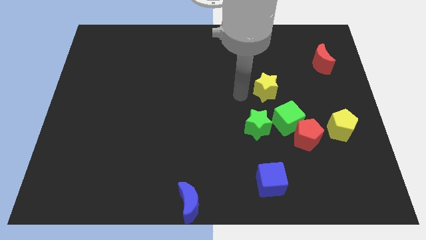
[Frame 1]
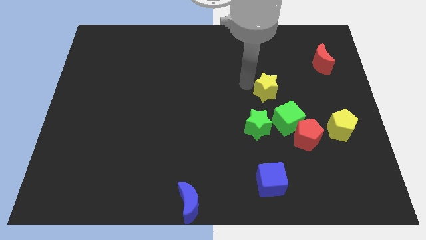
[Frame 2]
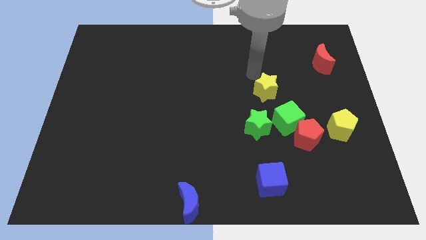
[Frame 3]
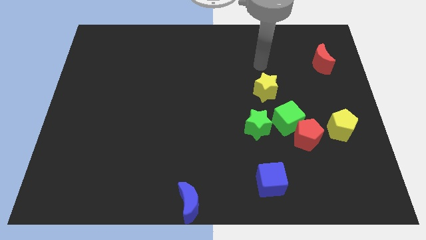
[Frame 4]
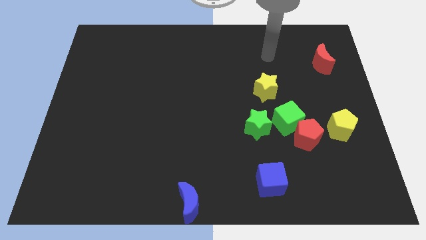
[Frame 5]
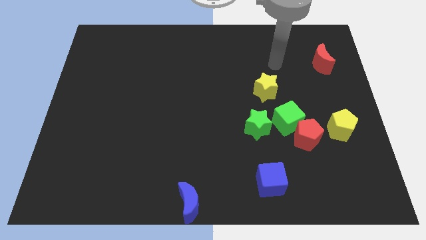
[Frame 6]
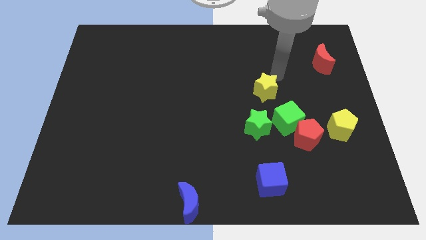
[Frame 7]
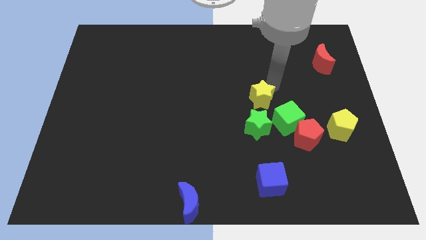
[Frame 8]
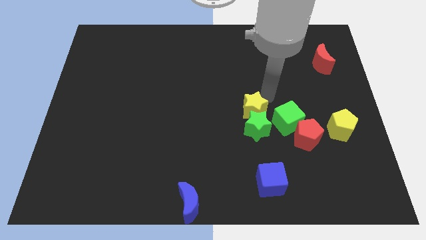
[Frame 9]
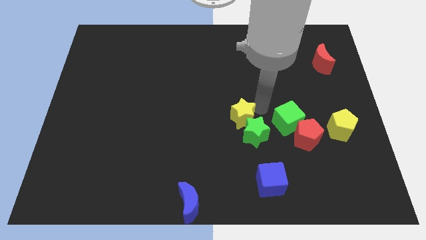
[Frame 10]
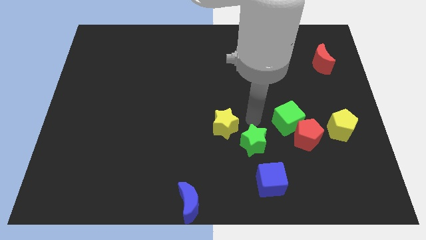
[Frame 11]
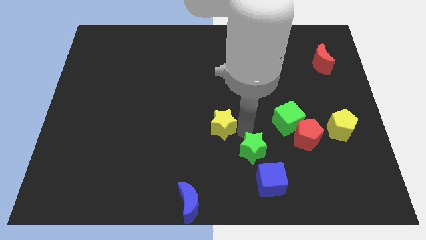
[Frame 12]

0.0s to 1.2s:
push the yellow star into the green star

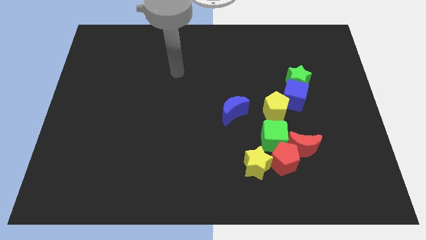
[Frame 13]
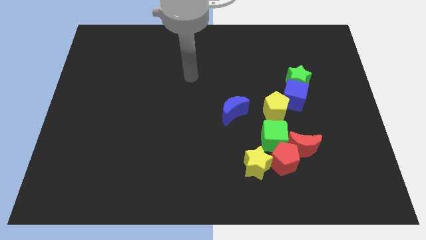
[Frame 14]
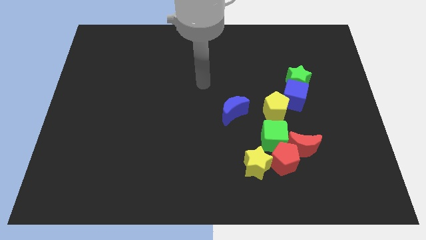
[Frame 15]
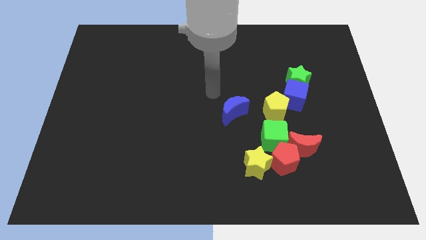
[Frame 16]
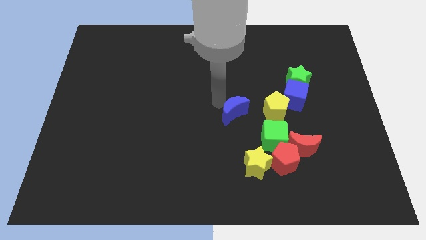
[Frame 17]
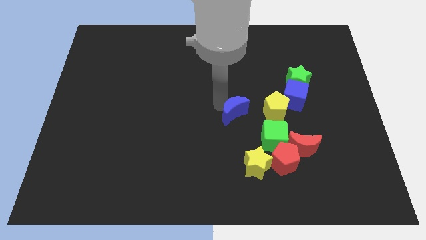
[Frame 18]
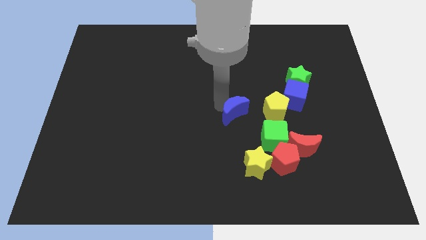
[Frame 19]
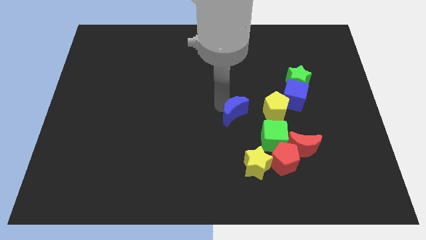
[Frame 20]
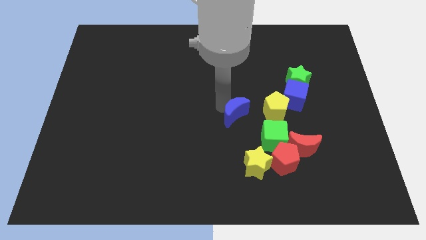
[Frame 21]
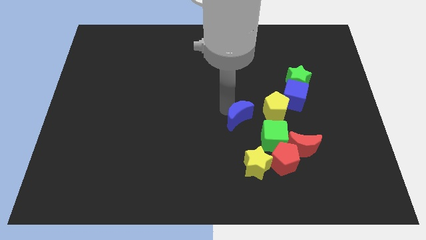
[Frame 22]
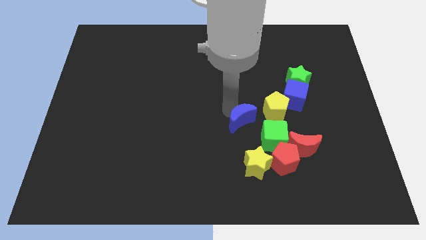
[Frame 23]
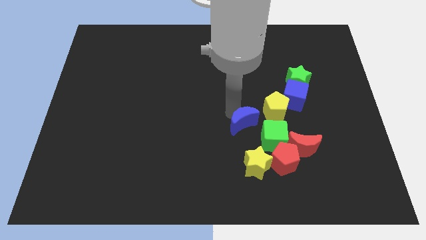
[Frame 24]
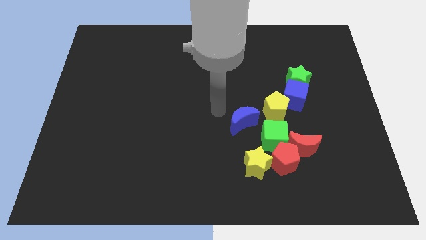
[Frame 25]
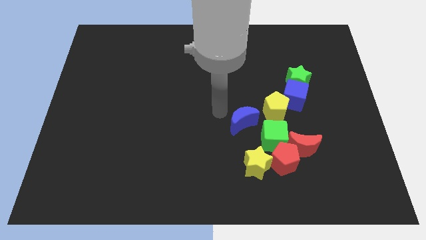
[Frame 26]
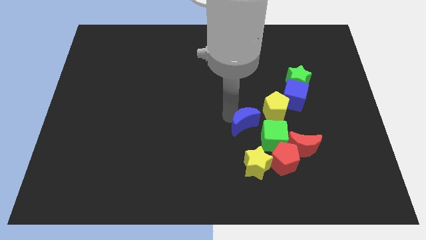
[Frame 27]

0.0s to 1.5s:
push the blue crescent slightly to the right

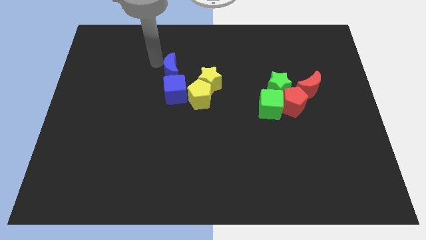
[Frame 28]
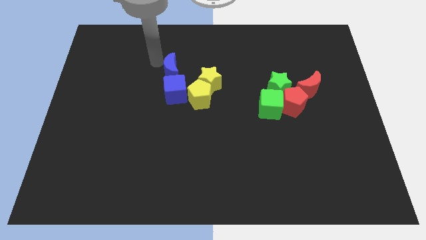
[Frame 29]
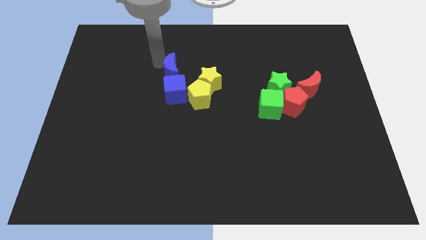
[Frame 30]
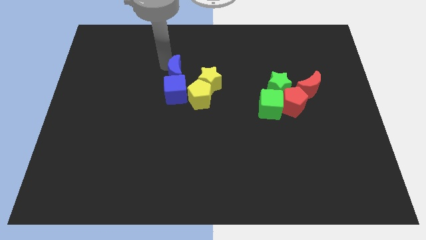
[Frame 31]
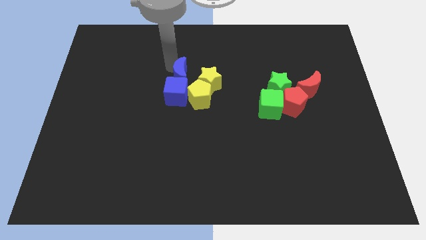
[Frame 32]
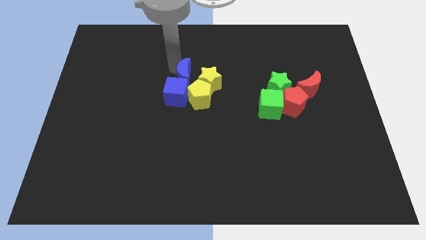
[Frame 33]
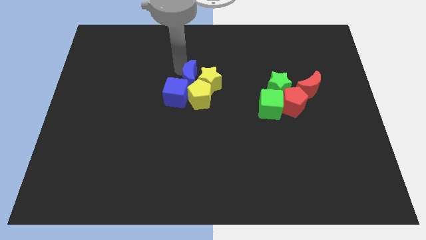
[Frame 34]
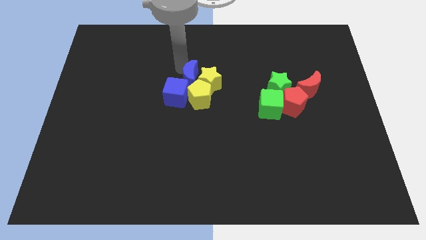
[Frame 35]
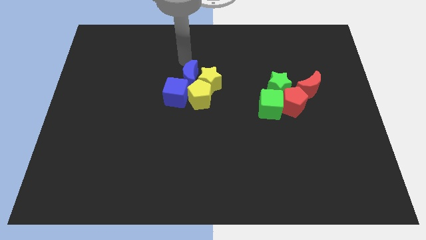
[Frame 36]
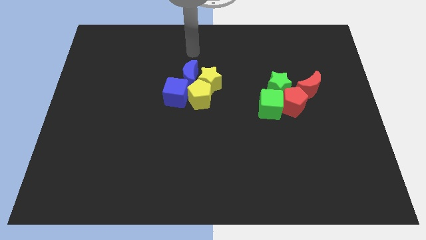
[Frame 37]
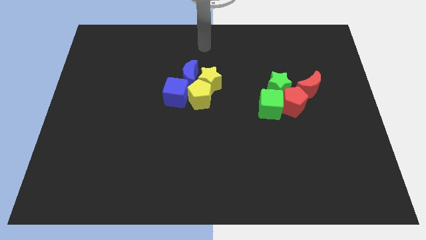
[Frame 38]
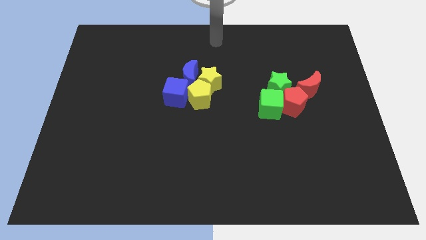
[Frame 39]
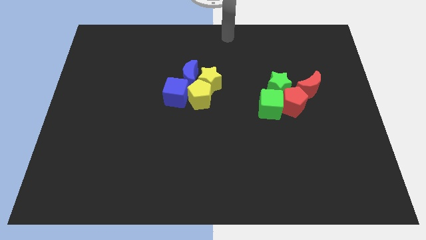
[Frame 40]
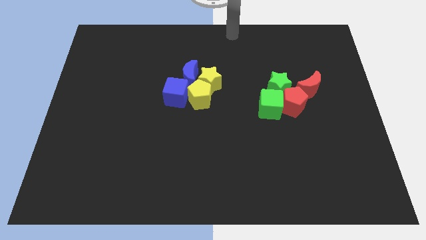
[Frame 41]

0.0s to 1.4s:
move the blue crescent to the left of the yellow star

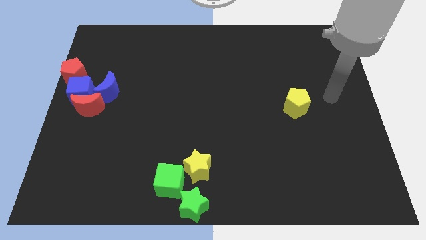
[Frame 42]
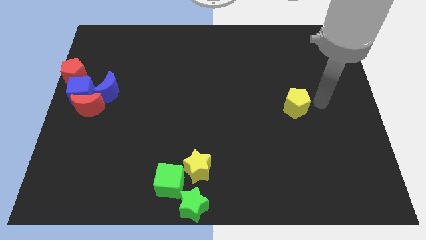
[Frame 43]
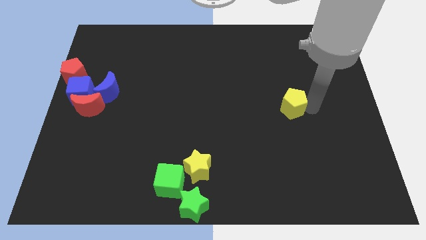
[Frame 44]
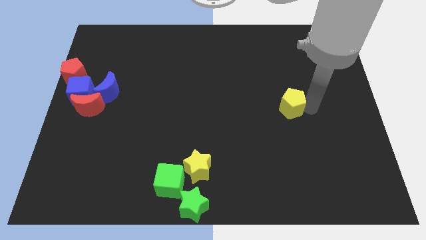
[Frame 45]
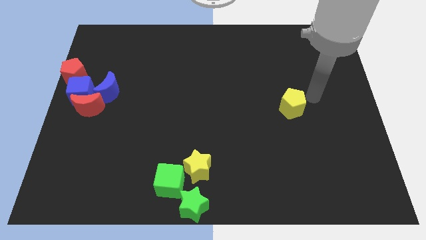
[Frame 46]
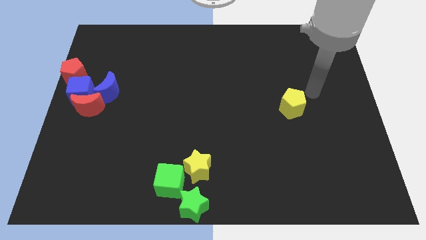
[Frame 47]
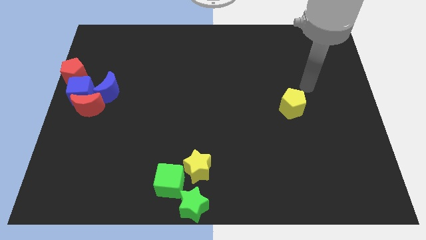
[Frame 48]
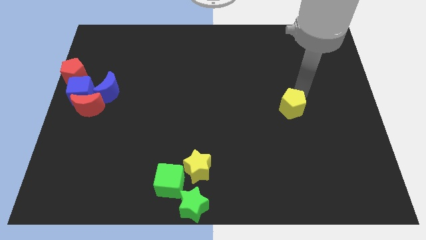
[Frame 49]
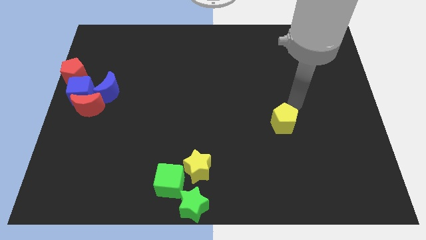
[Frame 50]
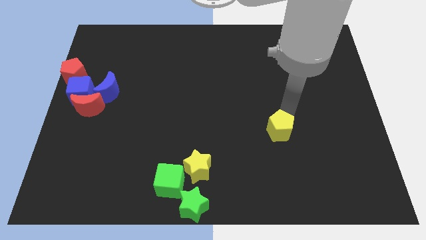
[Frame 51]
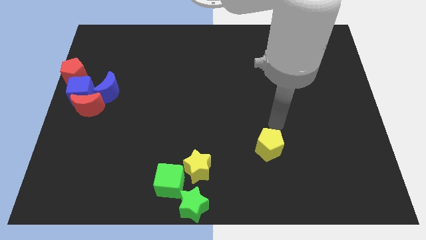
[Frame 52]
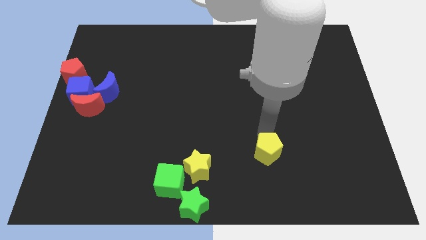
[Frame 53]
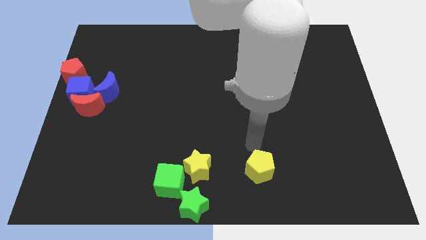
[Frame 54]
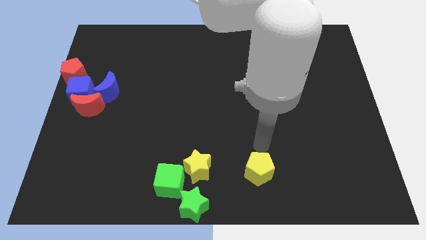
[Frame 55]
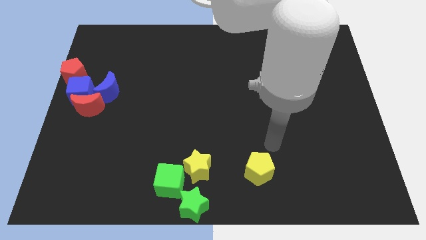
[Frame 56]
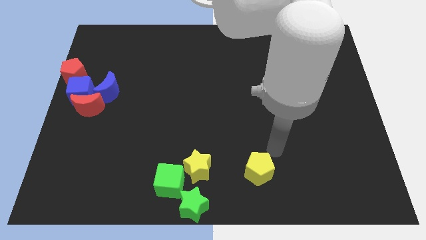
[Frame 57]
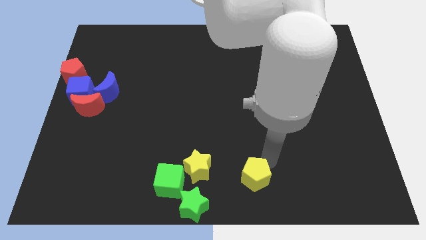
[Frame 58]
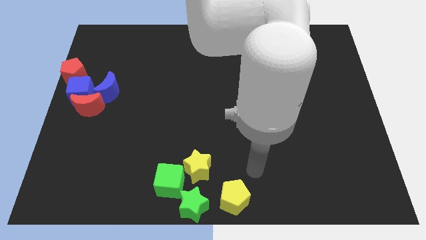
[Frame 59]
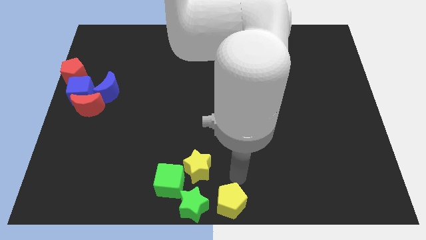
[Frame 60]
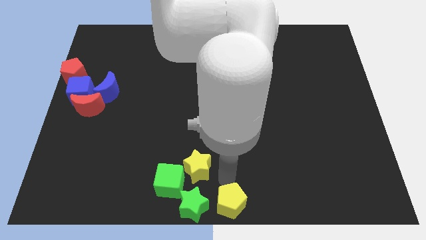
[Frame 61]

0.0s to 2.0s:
place the yellow pentagon towards bottom center

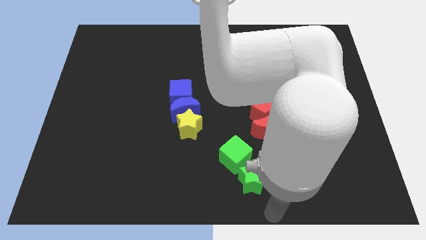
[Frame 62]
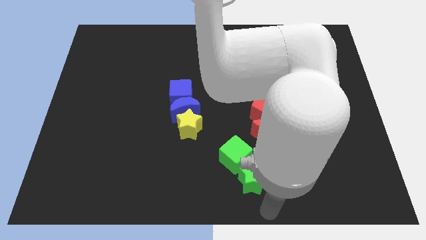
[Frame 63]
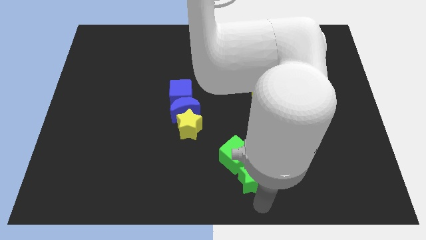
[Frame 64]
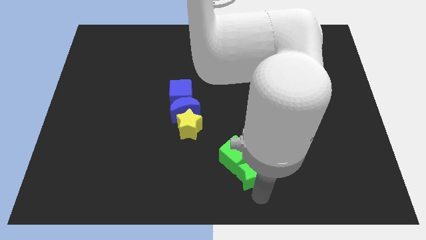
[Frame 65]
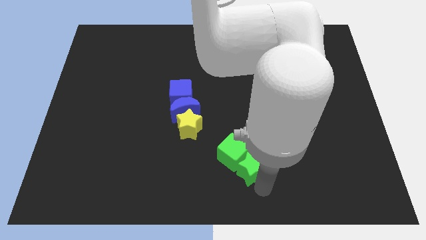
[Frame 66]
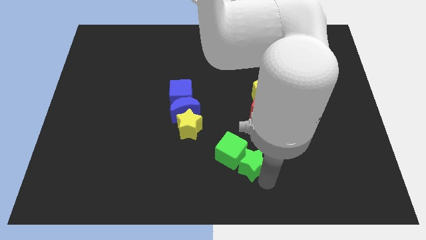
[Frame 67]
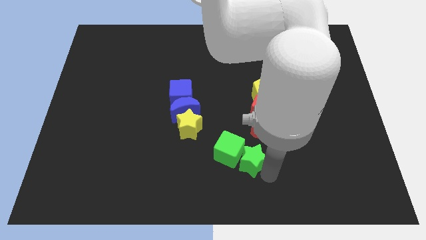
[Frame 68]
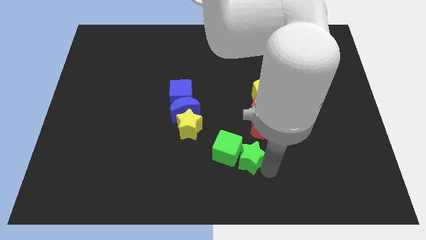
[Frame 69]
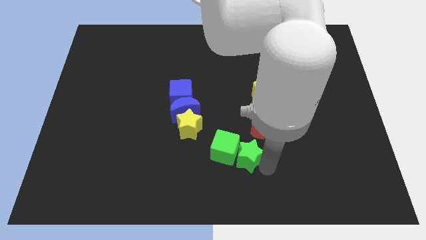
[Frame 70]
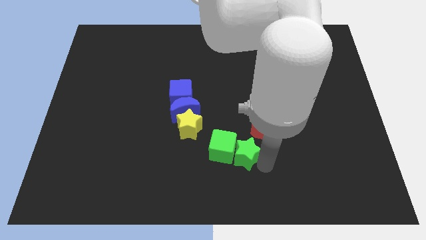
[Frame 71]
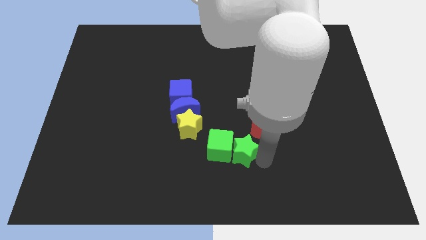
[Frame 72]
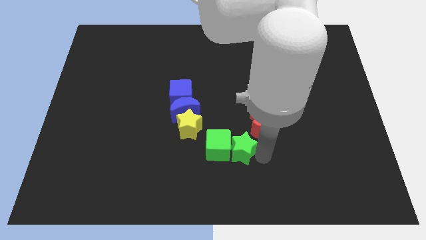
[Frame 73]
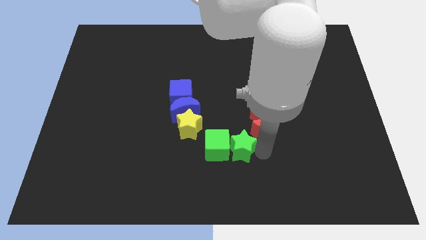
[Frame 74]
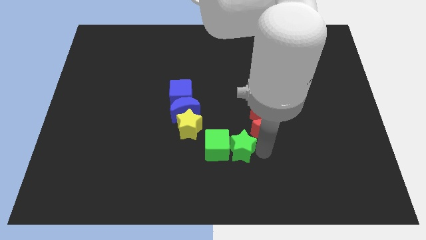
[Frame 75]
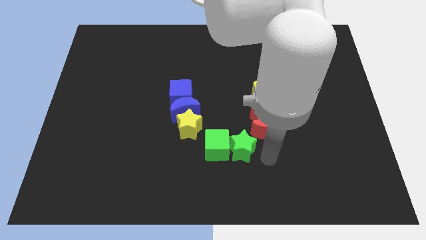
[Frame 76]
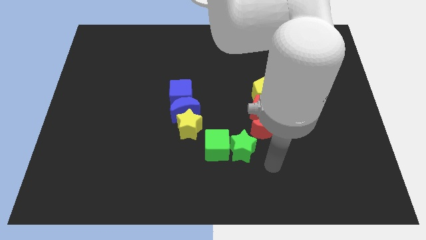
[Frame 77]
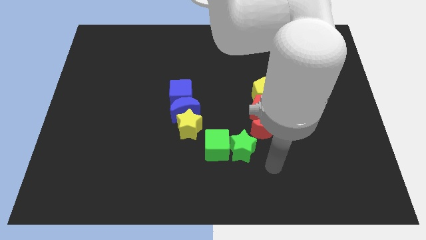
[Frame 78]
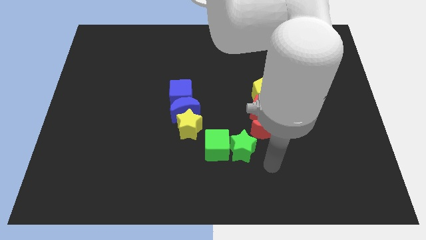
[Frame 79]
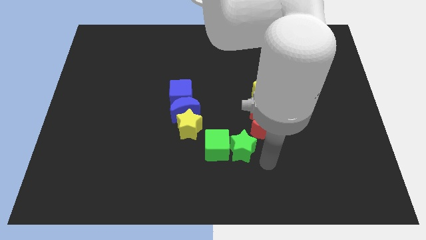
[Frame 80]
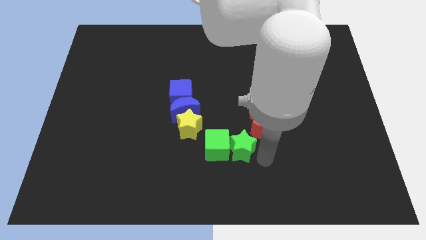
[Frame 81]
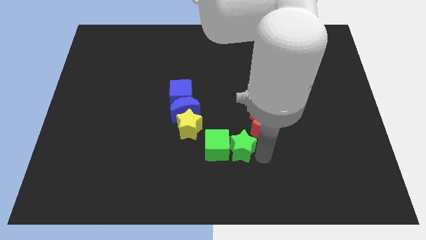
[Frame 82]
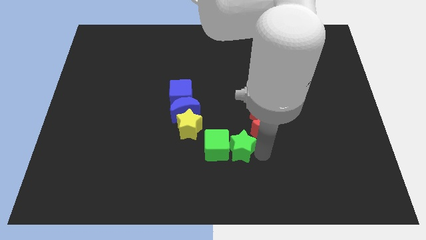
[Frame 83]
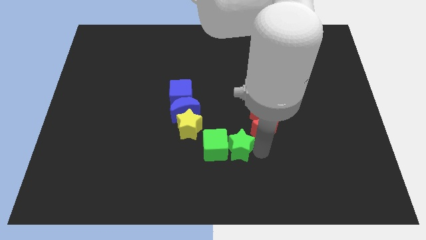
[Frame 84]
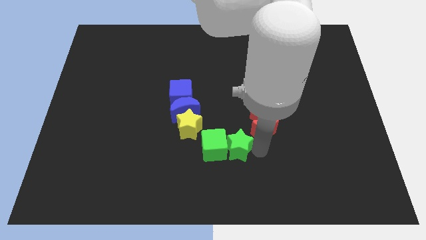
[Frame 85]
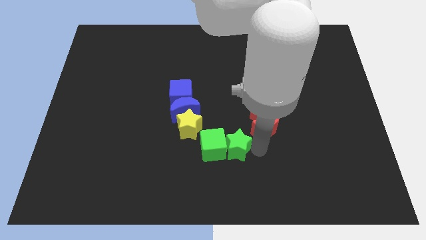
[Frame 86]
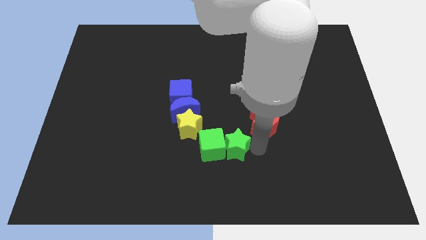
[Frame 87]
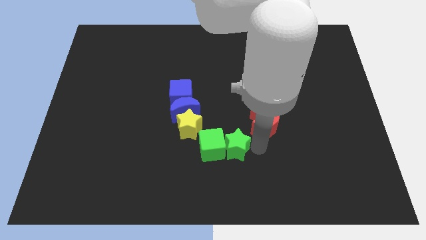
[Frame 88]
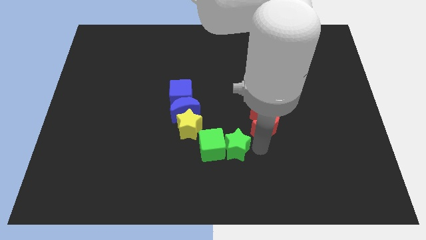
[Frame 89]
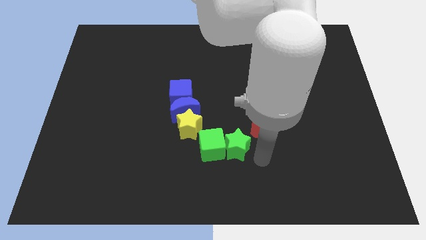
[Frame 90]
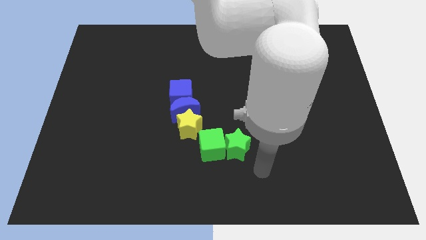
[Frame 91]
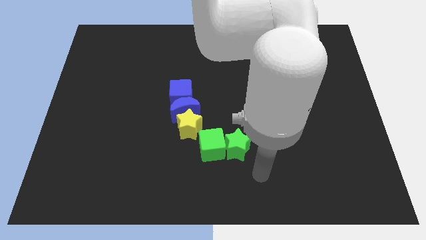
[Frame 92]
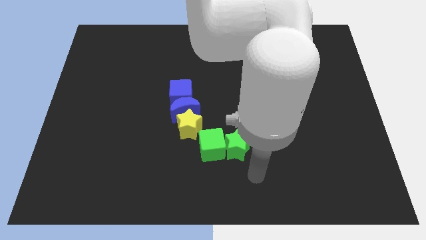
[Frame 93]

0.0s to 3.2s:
move the green star and green cube towards the center
